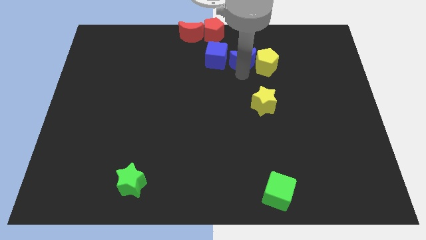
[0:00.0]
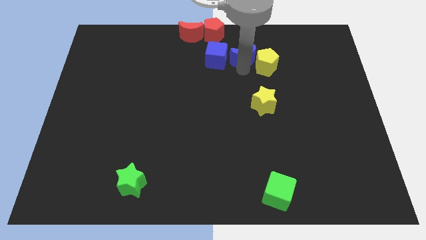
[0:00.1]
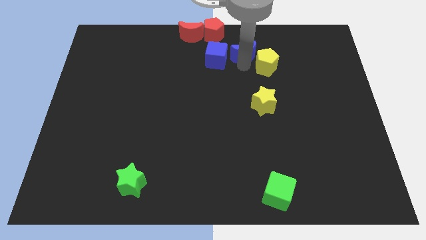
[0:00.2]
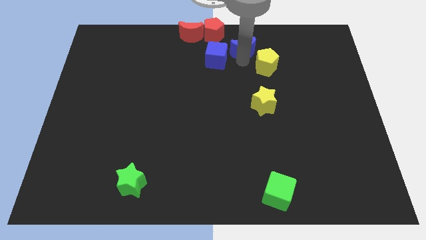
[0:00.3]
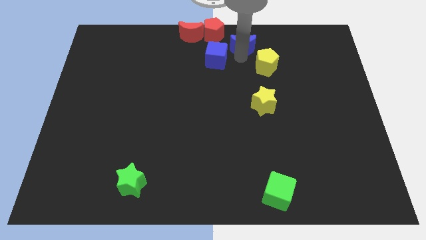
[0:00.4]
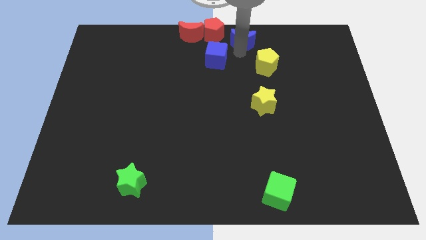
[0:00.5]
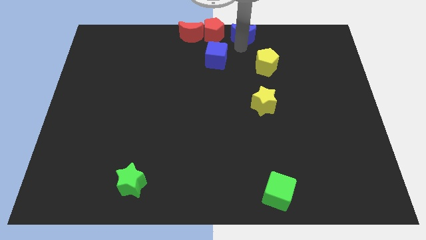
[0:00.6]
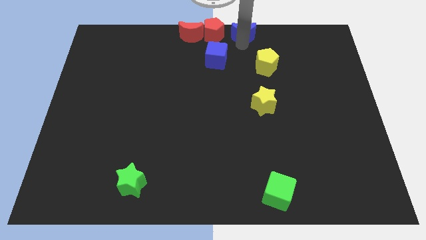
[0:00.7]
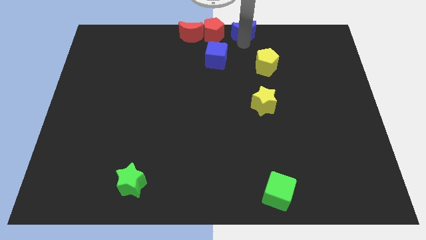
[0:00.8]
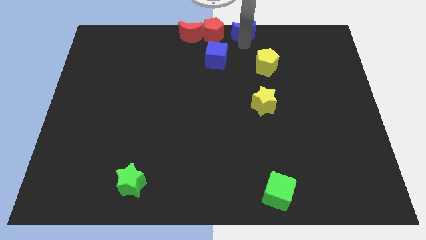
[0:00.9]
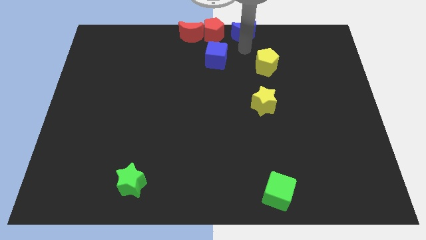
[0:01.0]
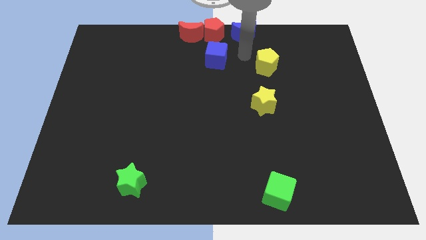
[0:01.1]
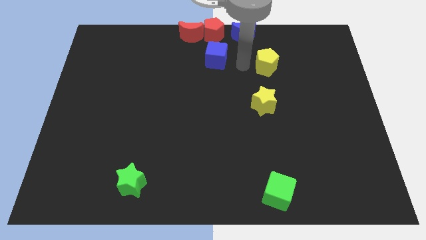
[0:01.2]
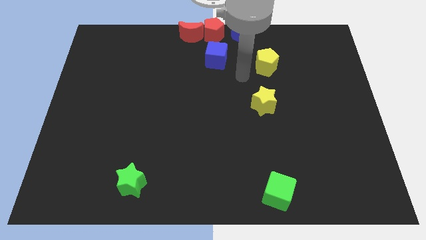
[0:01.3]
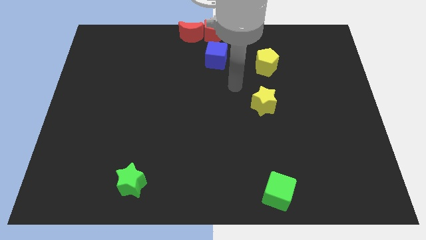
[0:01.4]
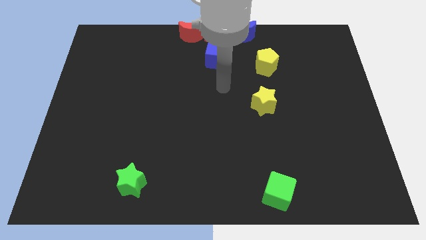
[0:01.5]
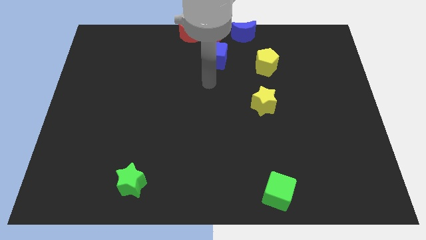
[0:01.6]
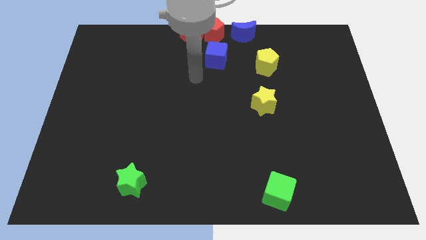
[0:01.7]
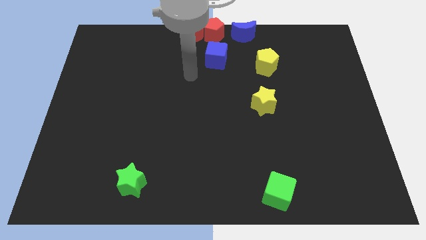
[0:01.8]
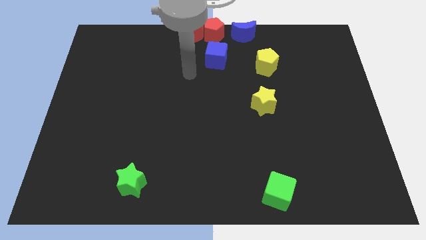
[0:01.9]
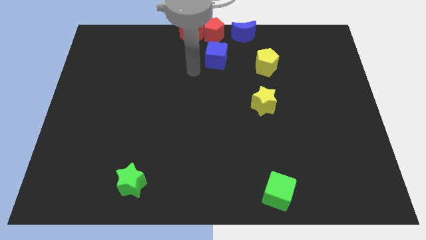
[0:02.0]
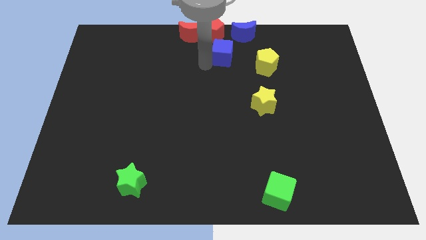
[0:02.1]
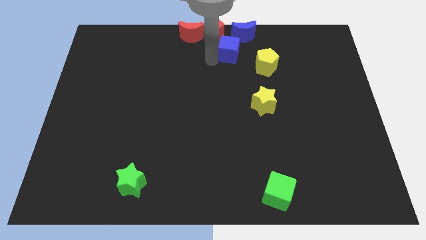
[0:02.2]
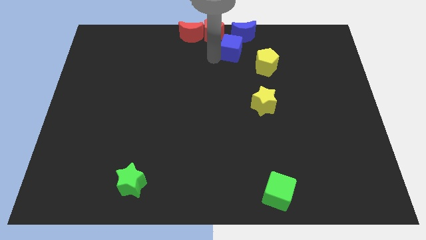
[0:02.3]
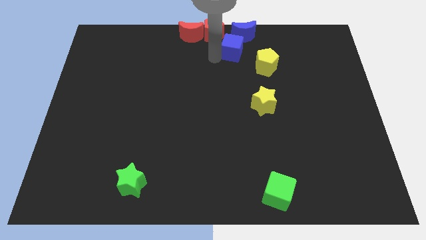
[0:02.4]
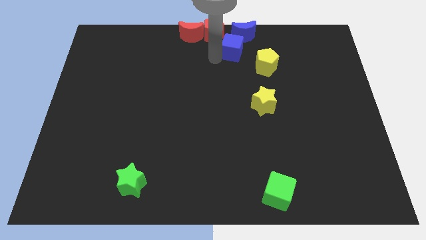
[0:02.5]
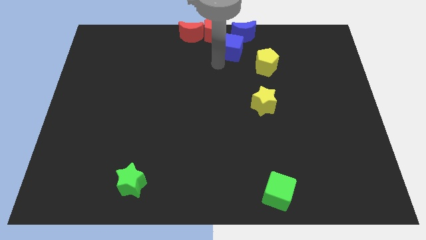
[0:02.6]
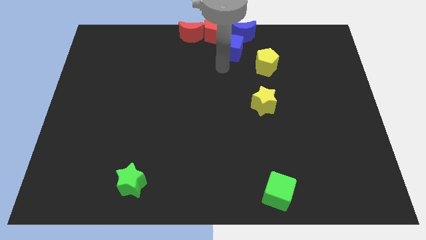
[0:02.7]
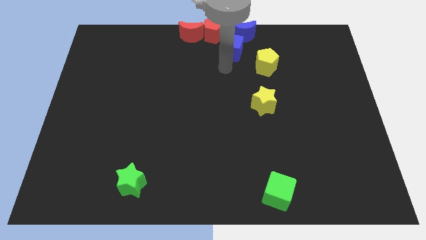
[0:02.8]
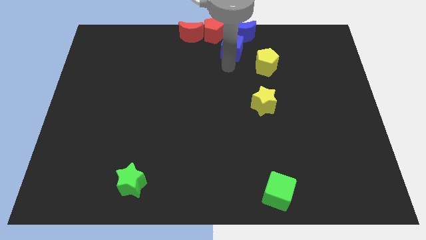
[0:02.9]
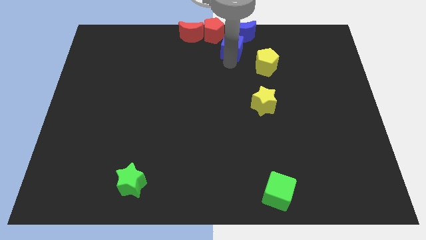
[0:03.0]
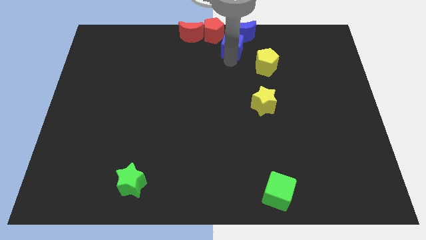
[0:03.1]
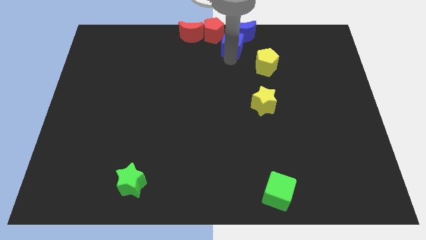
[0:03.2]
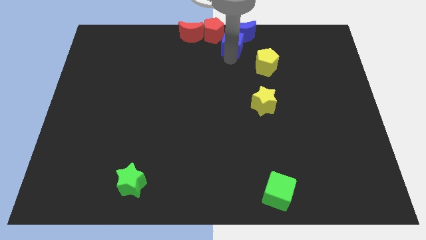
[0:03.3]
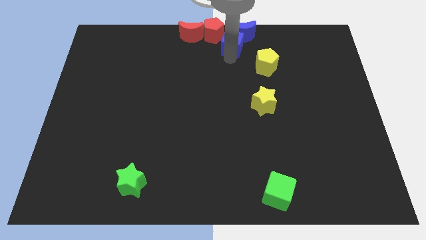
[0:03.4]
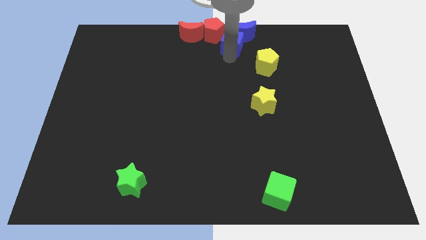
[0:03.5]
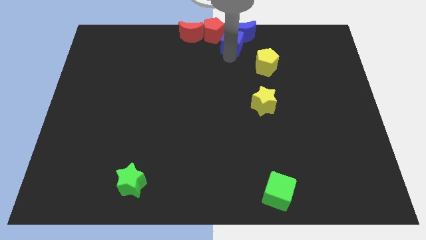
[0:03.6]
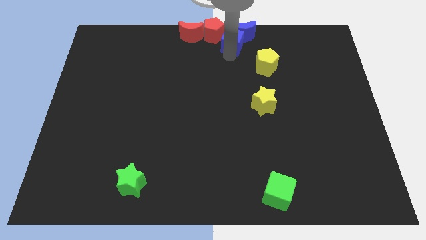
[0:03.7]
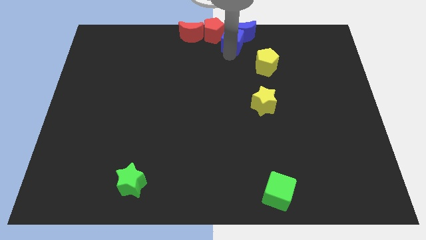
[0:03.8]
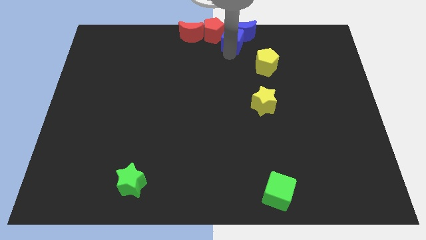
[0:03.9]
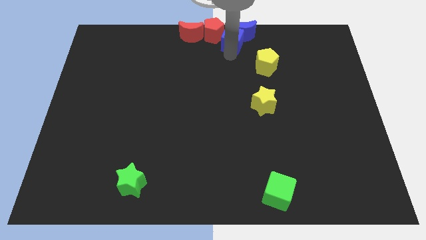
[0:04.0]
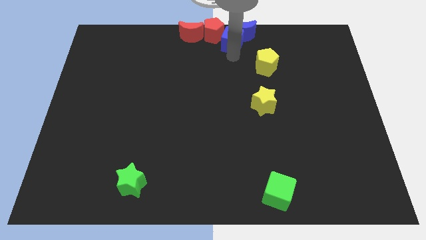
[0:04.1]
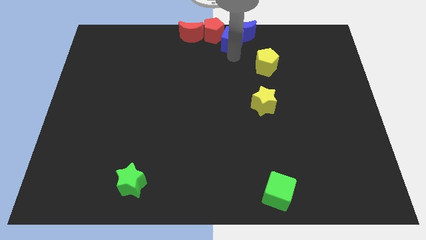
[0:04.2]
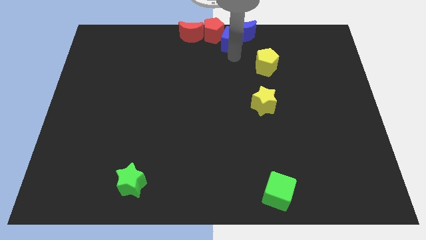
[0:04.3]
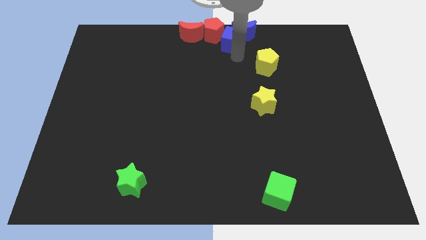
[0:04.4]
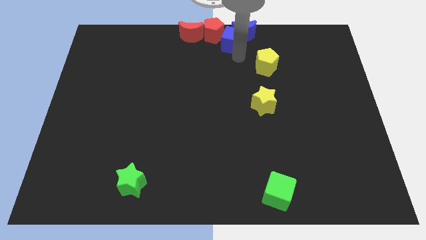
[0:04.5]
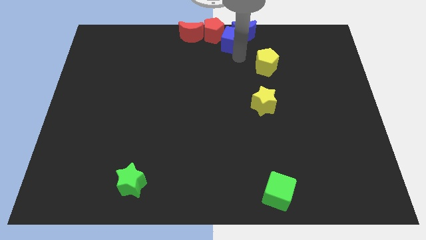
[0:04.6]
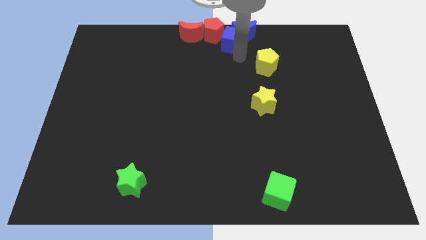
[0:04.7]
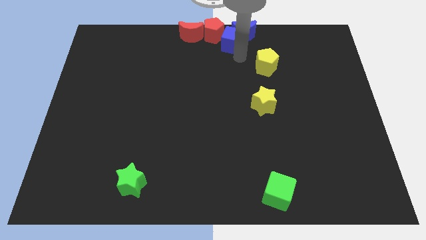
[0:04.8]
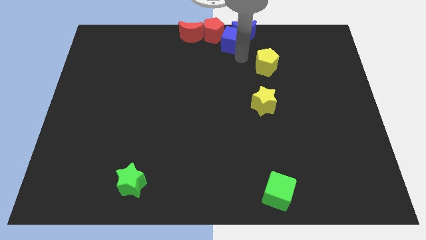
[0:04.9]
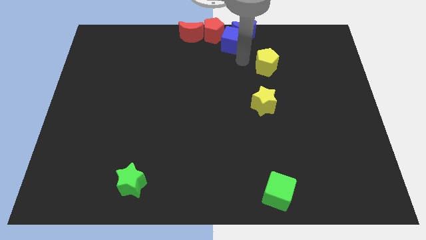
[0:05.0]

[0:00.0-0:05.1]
push blue moon and blue cube towards the top

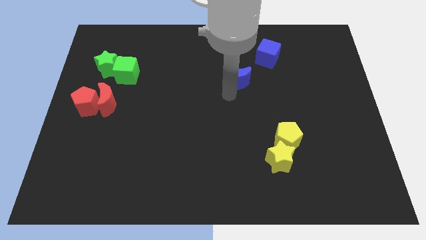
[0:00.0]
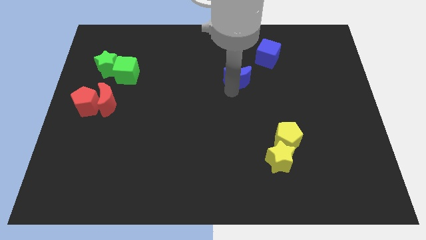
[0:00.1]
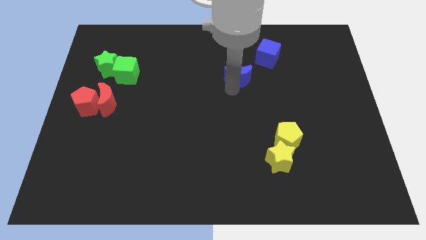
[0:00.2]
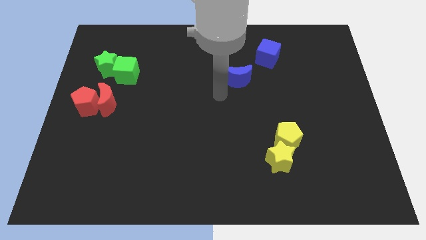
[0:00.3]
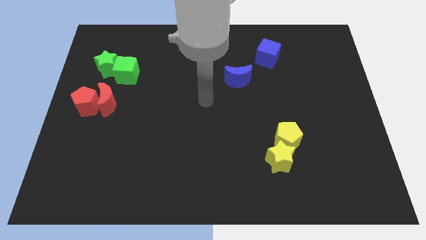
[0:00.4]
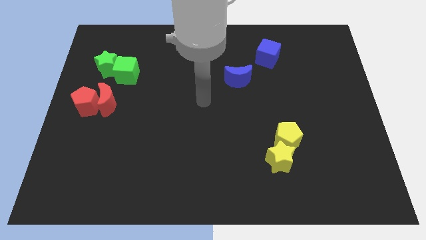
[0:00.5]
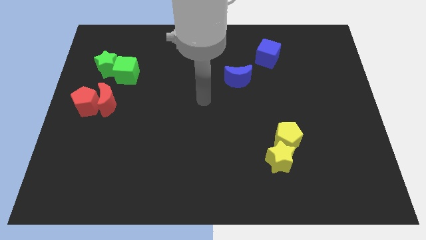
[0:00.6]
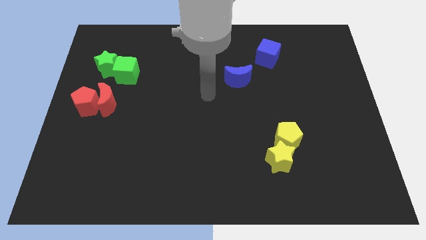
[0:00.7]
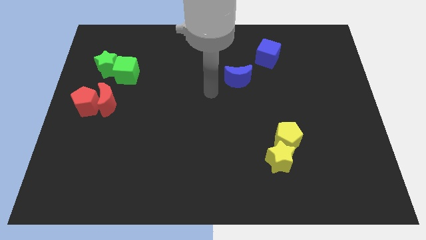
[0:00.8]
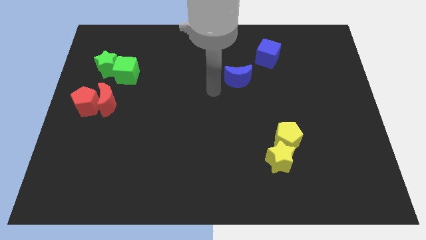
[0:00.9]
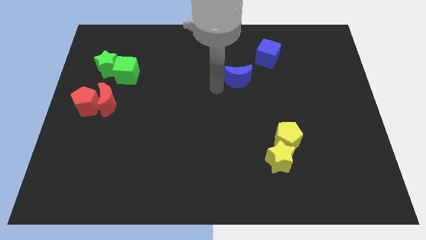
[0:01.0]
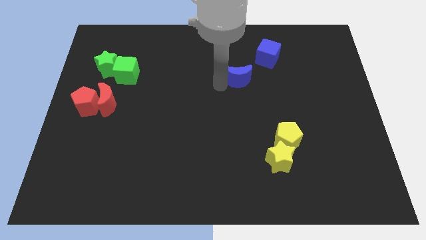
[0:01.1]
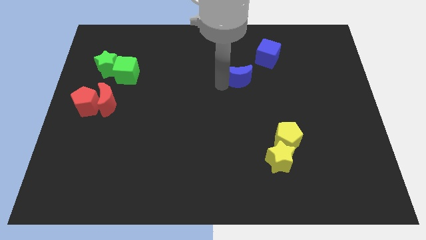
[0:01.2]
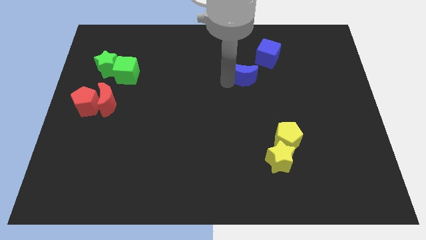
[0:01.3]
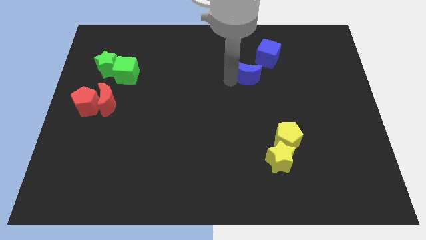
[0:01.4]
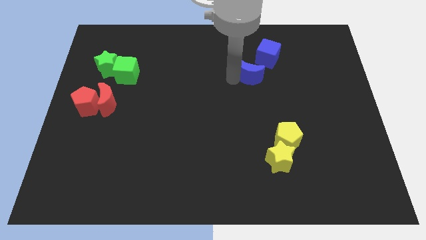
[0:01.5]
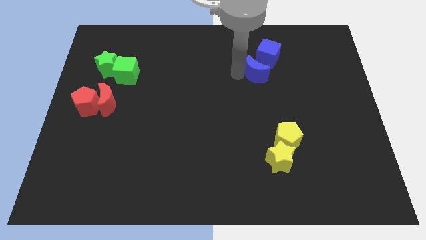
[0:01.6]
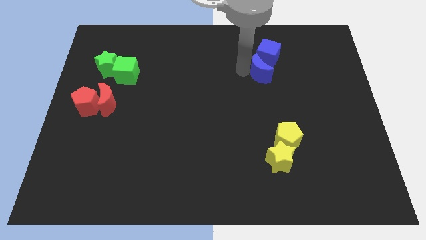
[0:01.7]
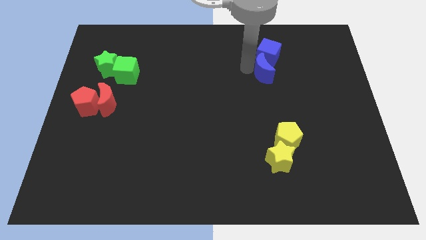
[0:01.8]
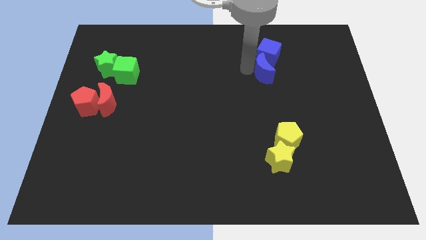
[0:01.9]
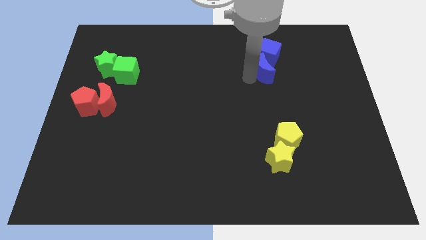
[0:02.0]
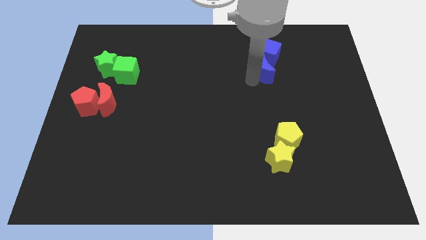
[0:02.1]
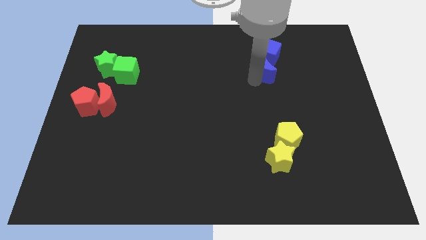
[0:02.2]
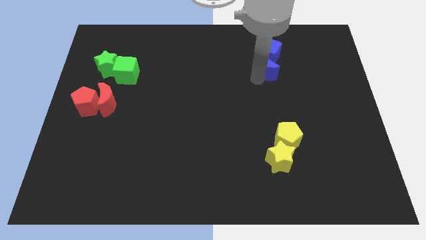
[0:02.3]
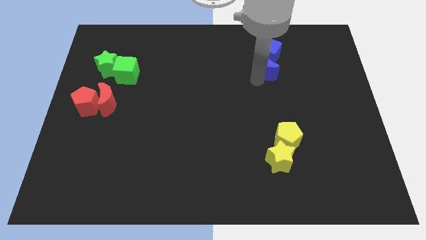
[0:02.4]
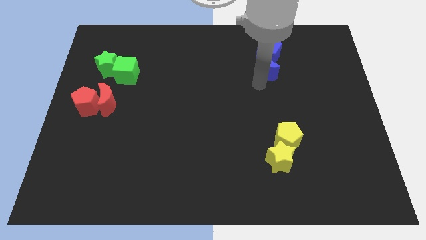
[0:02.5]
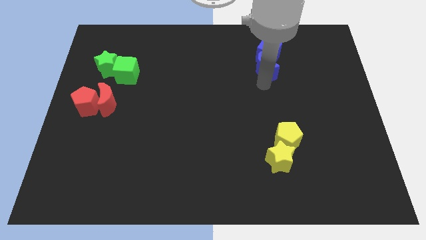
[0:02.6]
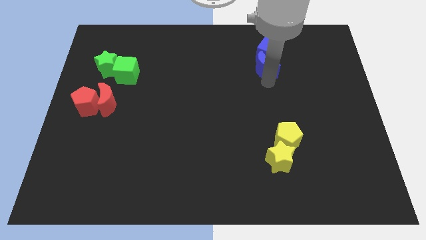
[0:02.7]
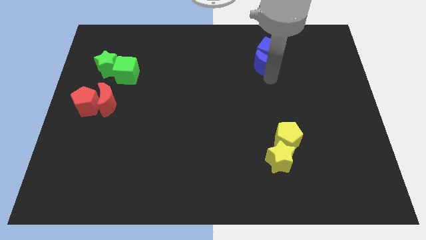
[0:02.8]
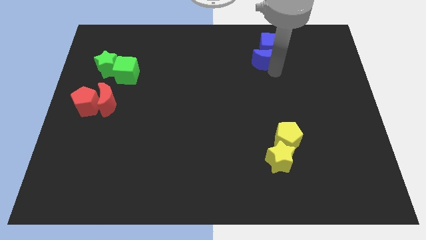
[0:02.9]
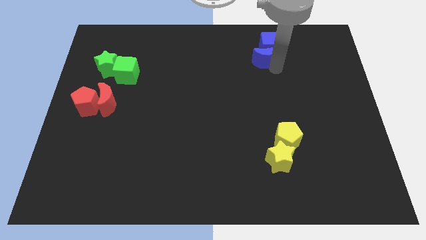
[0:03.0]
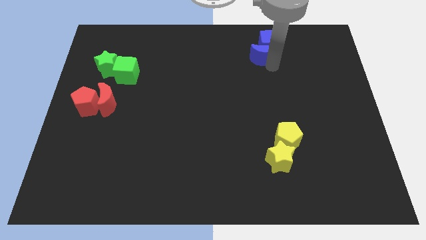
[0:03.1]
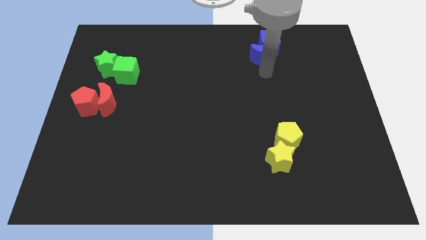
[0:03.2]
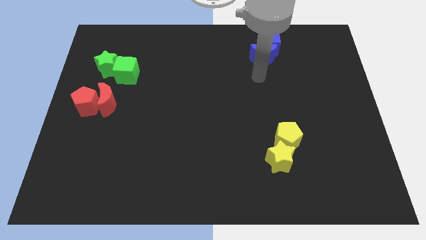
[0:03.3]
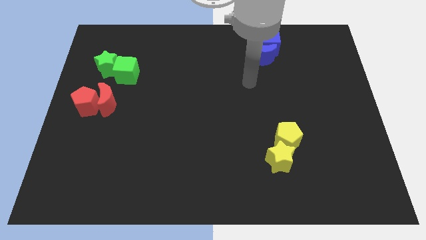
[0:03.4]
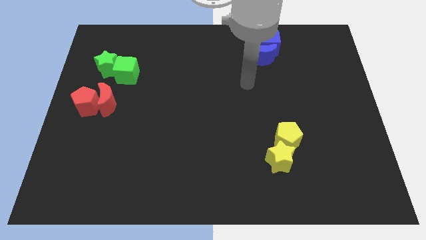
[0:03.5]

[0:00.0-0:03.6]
push the blue moon into blue cube

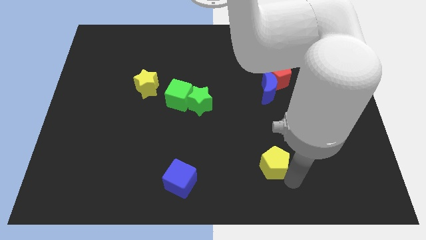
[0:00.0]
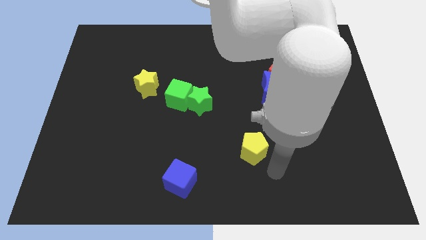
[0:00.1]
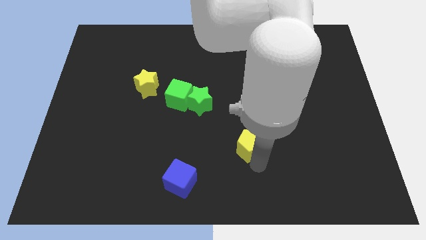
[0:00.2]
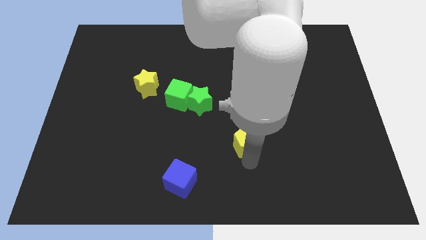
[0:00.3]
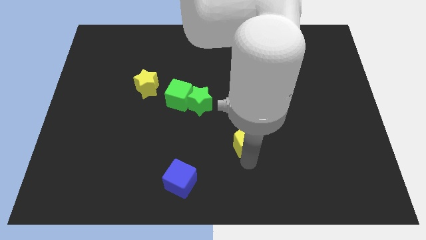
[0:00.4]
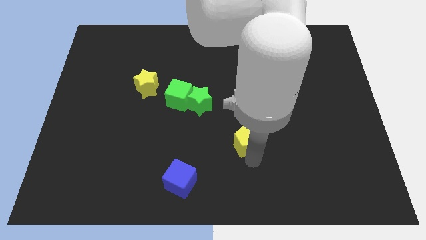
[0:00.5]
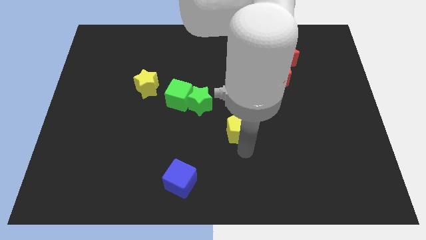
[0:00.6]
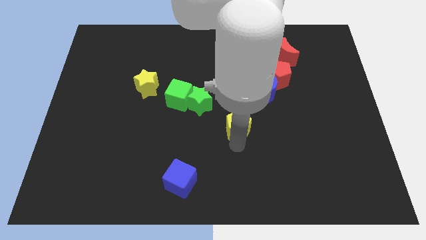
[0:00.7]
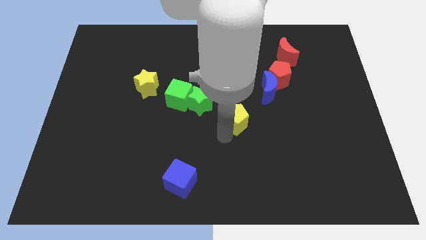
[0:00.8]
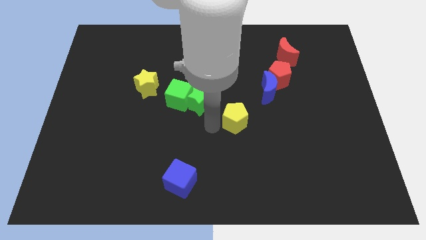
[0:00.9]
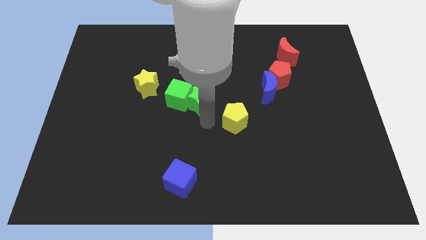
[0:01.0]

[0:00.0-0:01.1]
slide the yellow pentagon diagonally bottom left to the blue moon
